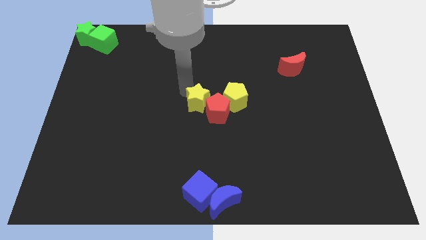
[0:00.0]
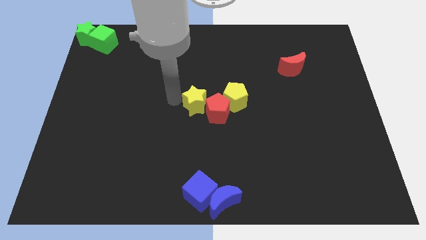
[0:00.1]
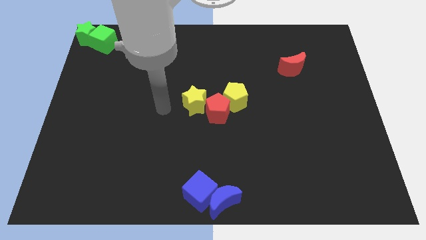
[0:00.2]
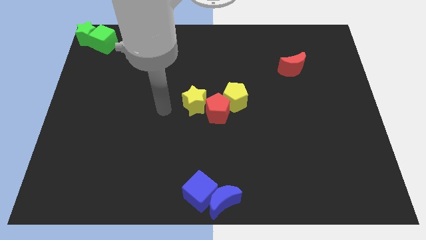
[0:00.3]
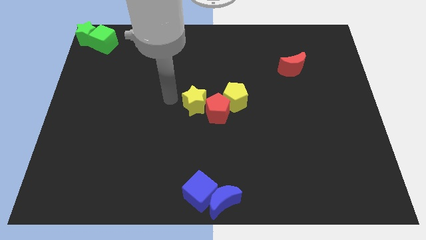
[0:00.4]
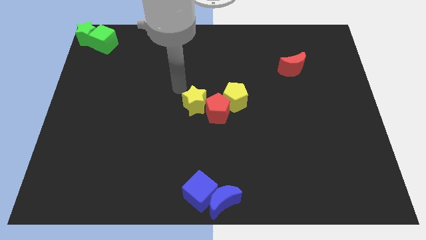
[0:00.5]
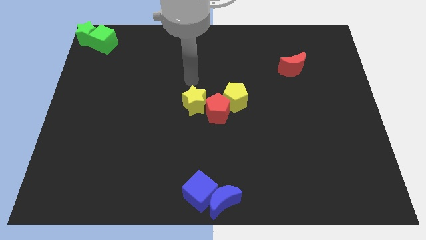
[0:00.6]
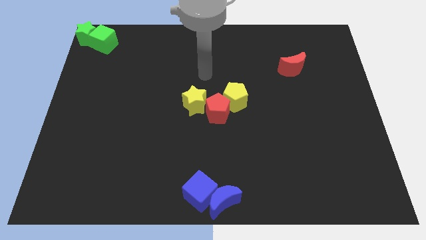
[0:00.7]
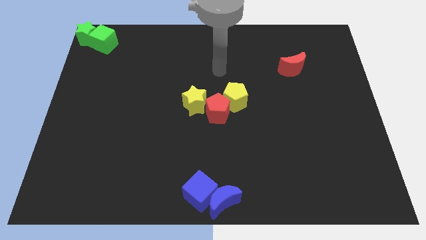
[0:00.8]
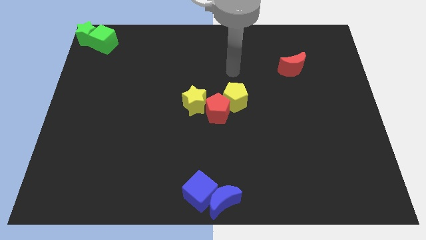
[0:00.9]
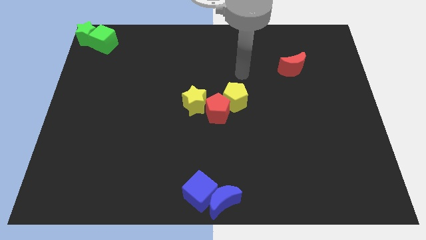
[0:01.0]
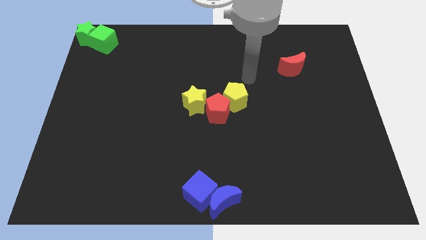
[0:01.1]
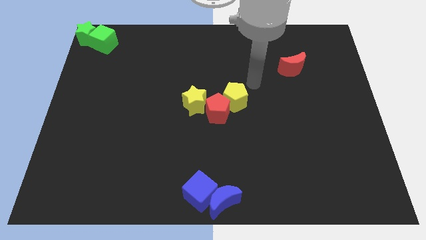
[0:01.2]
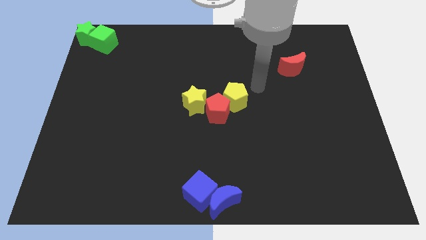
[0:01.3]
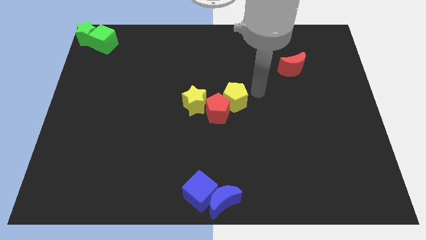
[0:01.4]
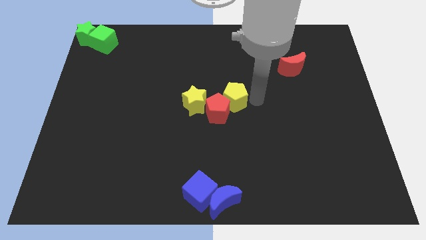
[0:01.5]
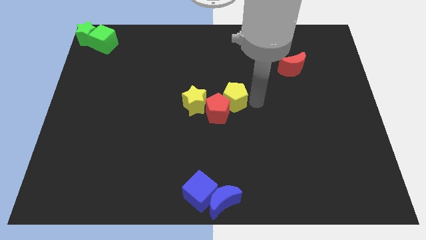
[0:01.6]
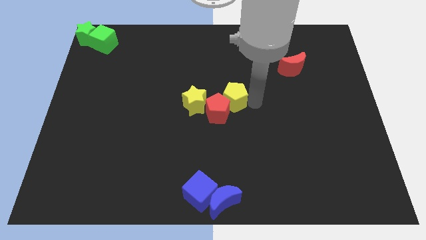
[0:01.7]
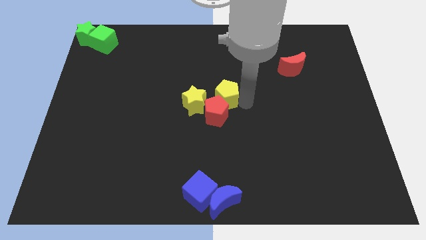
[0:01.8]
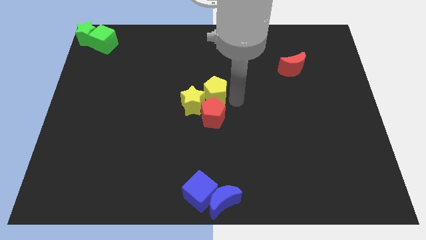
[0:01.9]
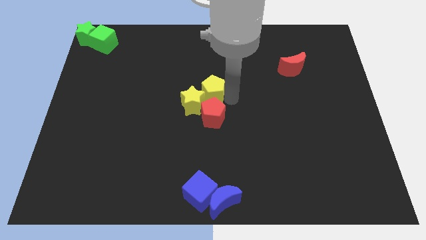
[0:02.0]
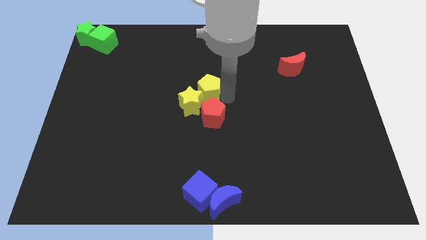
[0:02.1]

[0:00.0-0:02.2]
place yellow pentagon above red pentagon

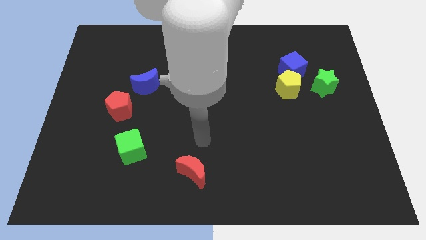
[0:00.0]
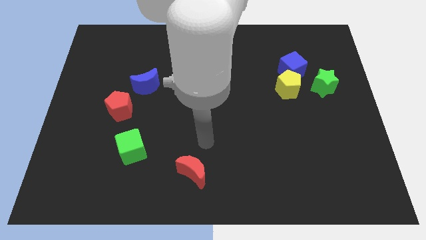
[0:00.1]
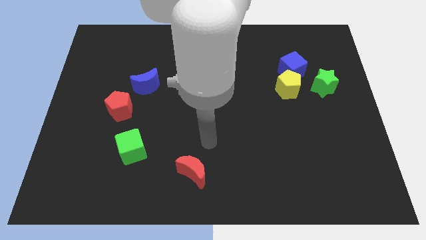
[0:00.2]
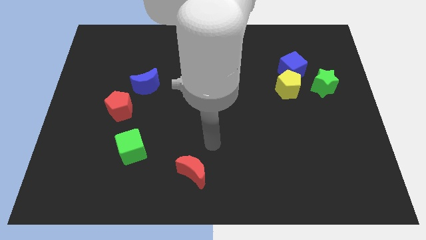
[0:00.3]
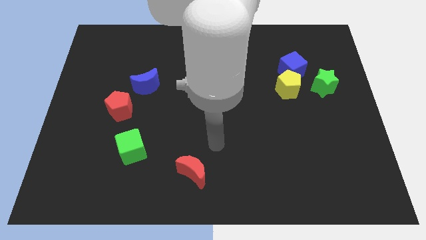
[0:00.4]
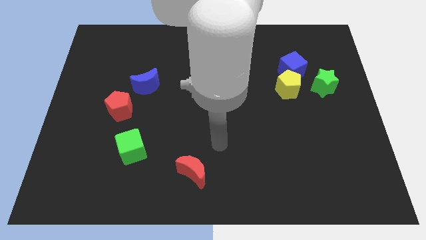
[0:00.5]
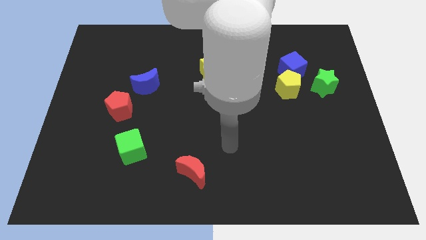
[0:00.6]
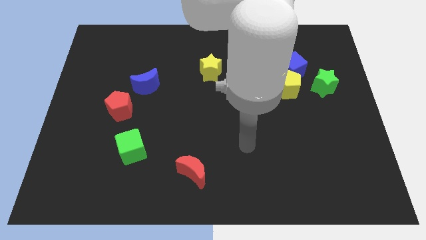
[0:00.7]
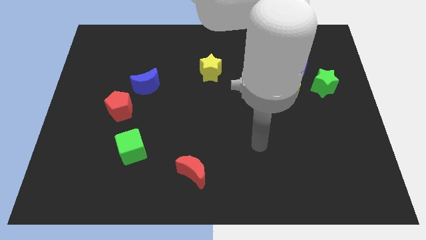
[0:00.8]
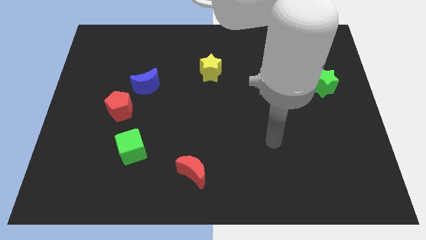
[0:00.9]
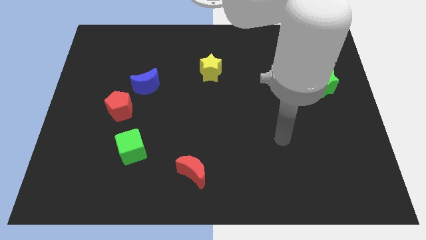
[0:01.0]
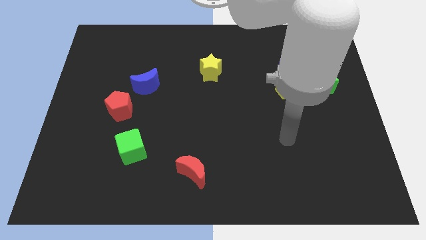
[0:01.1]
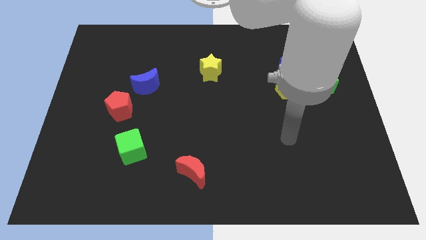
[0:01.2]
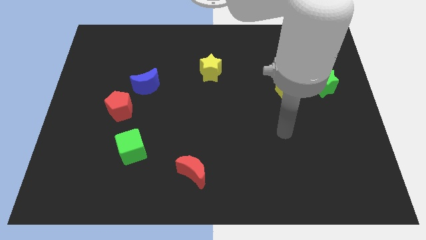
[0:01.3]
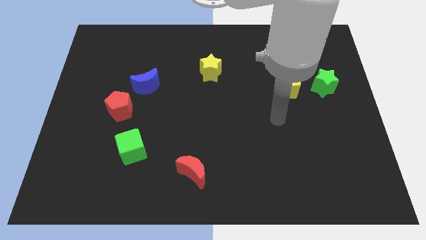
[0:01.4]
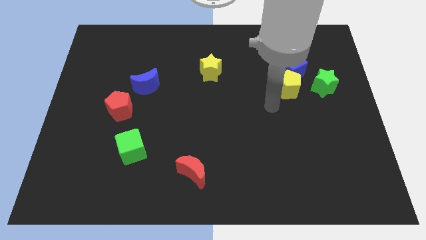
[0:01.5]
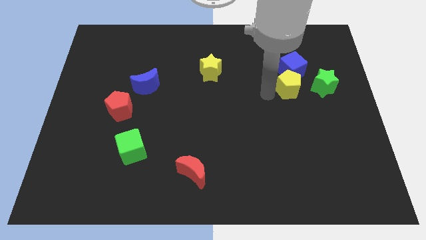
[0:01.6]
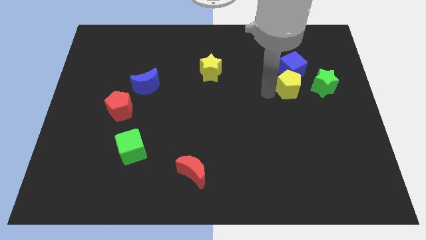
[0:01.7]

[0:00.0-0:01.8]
drag the pointer to the left side of the yellow pentagon

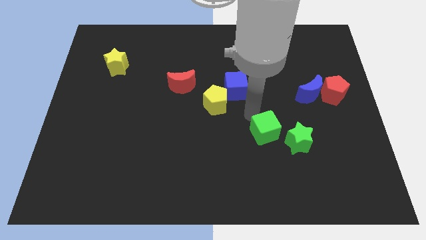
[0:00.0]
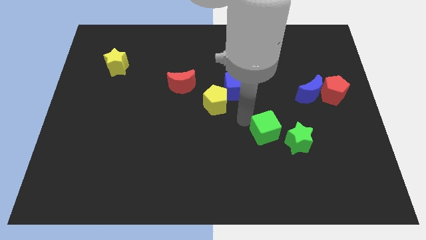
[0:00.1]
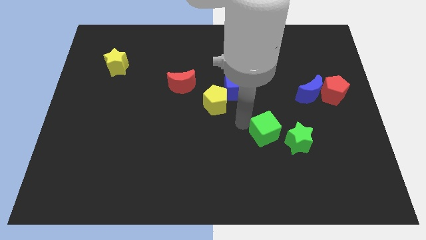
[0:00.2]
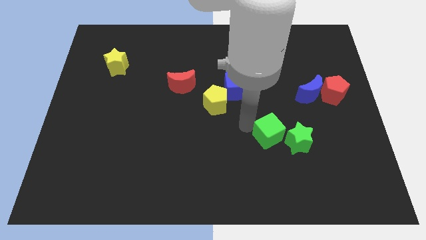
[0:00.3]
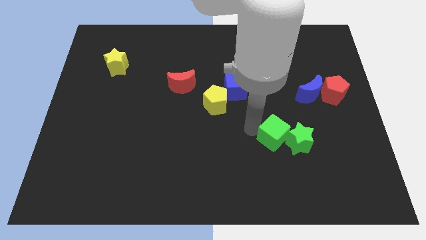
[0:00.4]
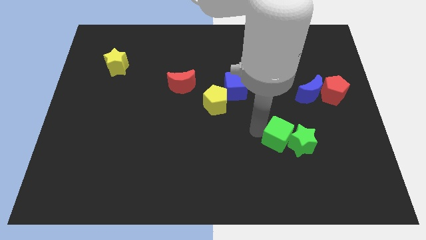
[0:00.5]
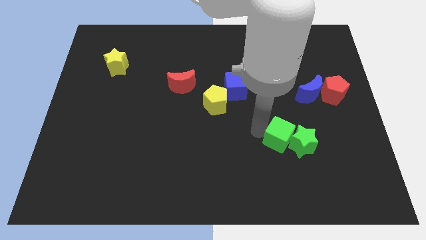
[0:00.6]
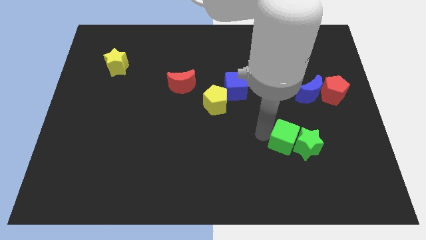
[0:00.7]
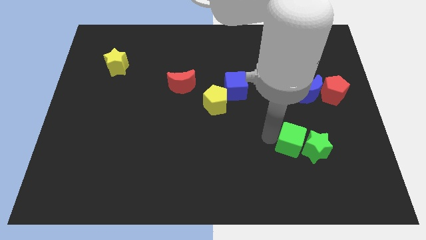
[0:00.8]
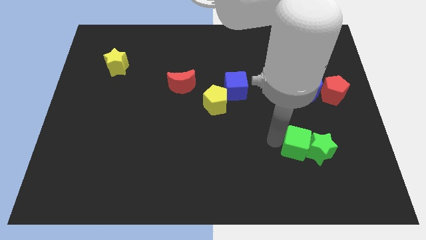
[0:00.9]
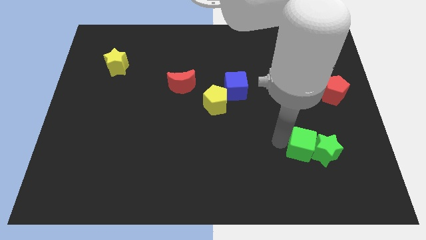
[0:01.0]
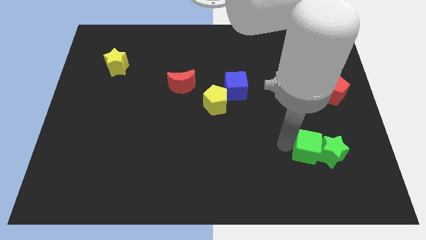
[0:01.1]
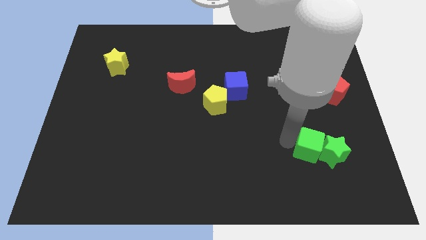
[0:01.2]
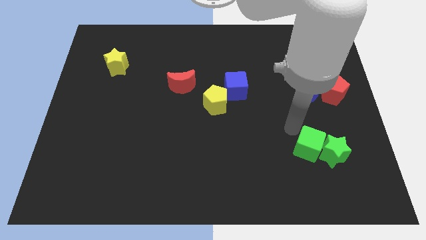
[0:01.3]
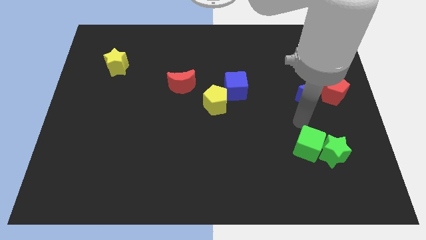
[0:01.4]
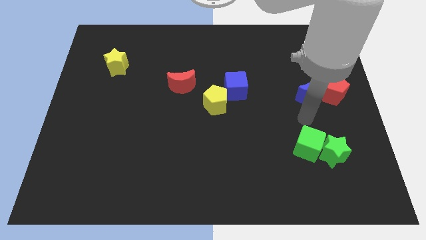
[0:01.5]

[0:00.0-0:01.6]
move the green star into the green cube

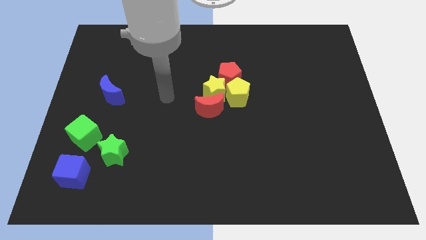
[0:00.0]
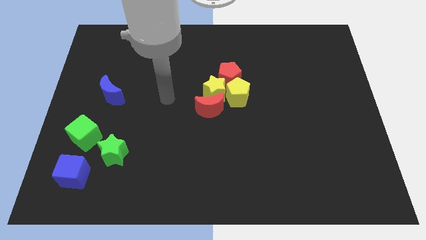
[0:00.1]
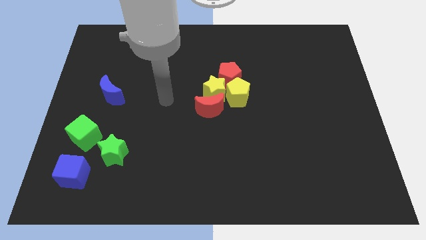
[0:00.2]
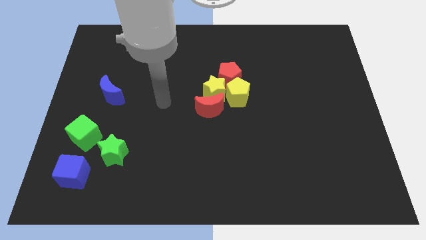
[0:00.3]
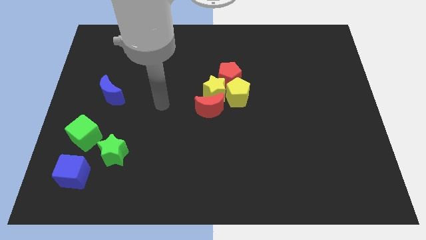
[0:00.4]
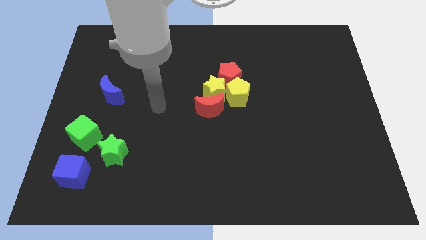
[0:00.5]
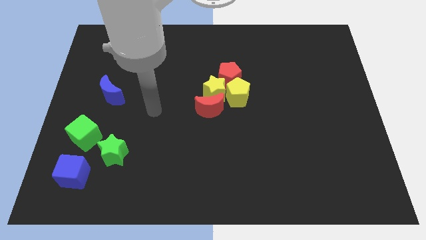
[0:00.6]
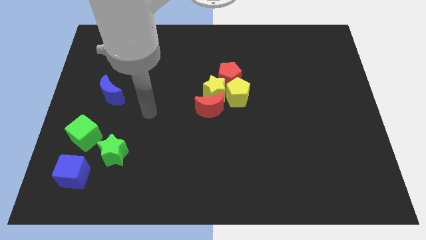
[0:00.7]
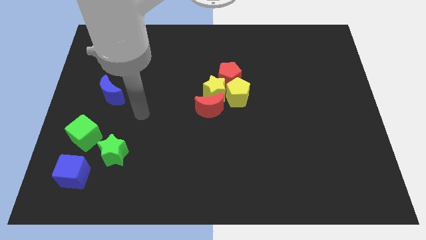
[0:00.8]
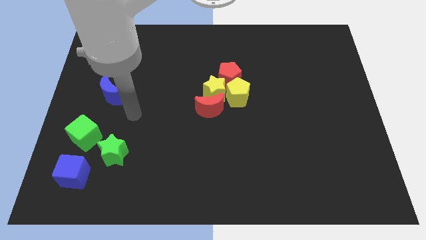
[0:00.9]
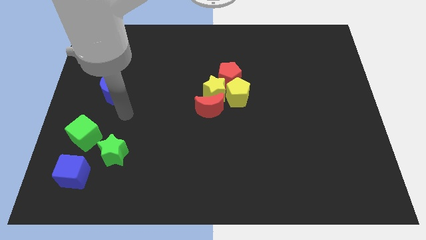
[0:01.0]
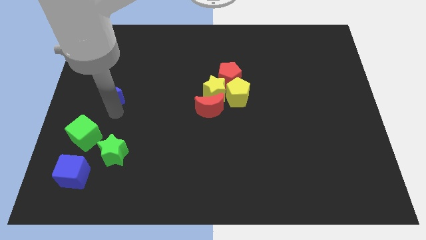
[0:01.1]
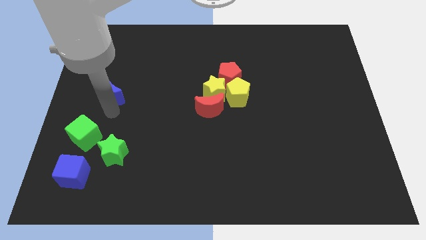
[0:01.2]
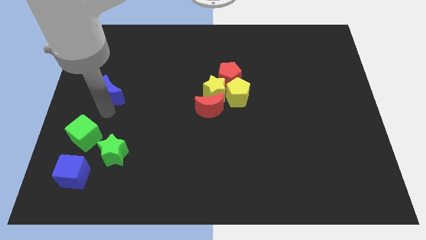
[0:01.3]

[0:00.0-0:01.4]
point your arm at the bottom of the blue crescent

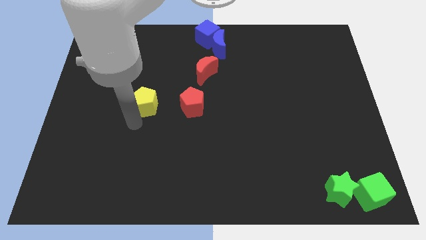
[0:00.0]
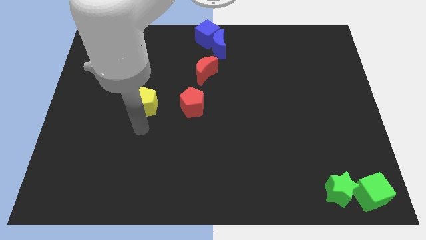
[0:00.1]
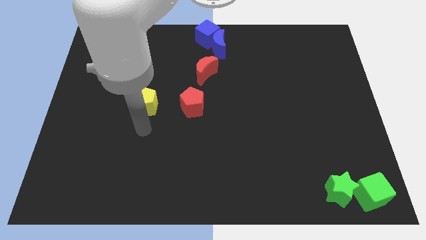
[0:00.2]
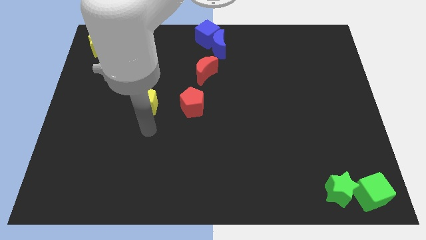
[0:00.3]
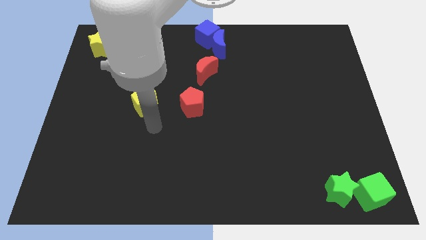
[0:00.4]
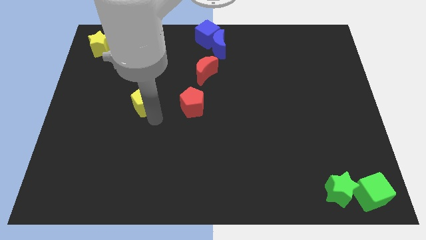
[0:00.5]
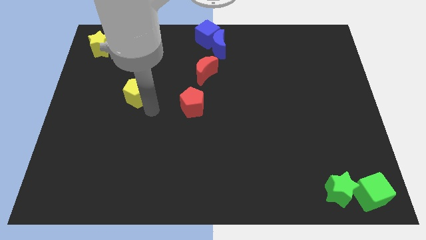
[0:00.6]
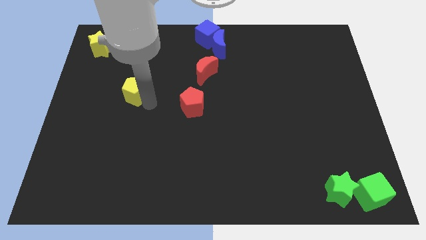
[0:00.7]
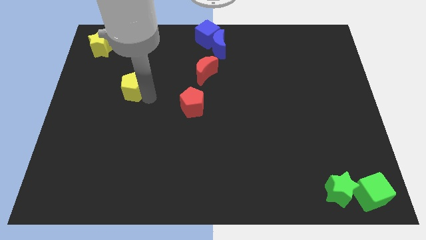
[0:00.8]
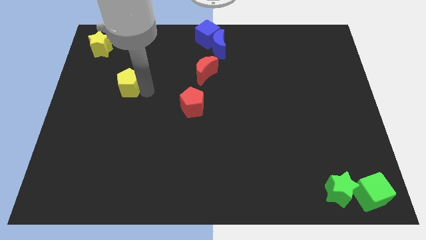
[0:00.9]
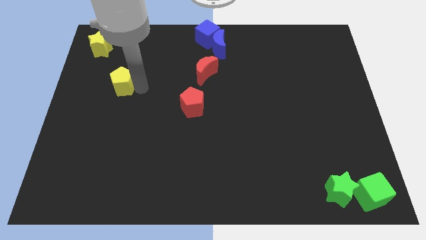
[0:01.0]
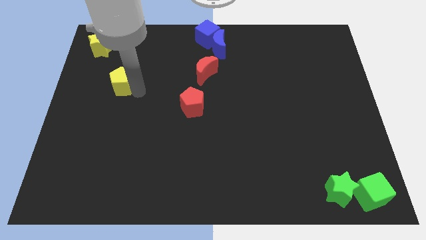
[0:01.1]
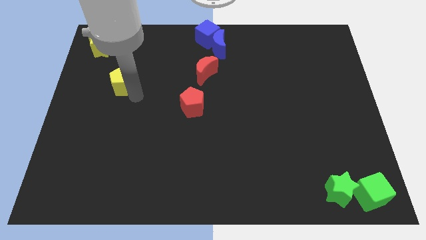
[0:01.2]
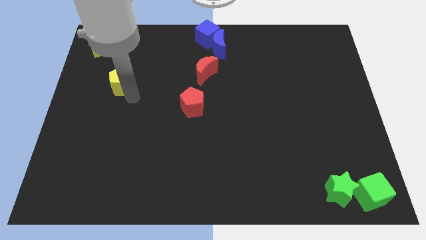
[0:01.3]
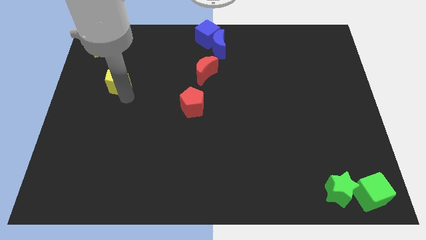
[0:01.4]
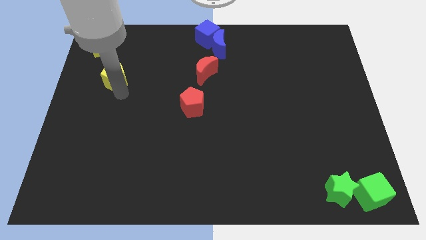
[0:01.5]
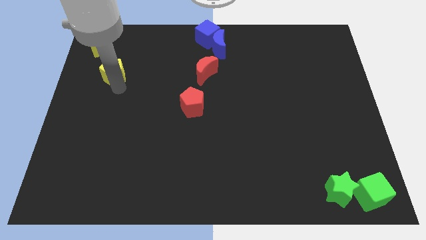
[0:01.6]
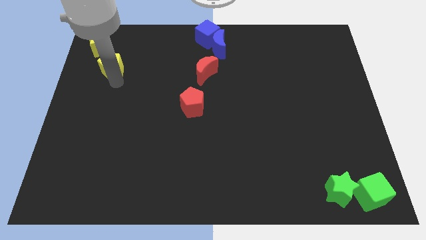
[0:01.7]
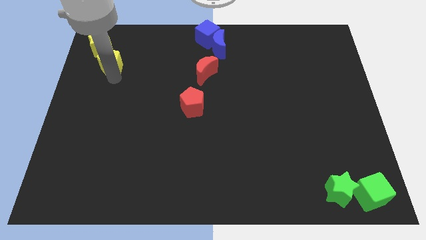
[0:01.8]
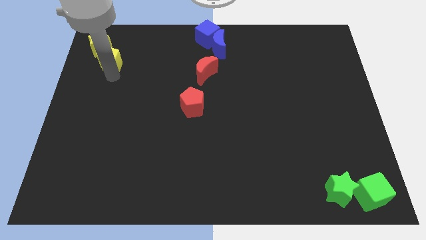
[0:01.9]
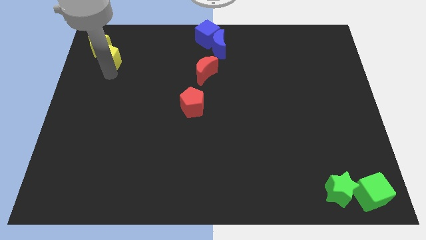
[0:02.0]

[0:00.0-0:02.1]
move yellow pentagon into yellow star
